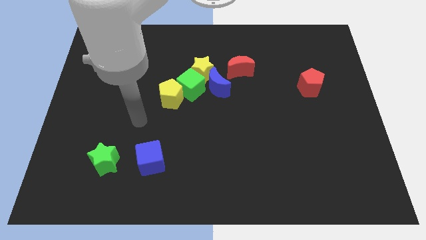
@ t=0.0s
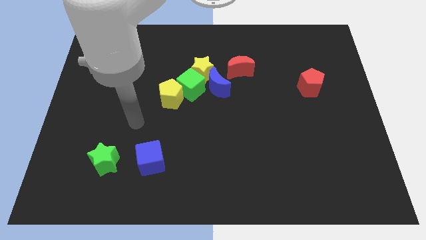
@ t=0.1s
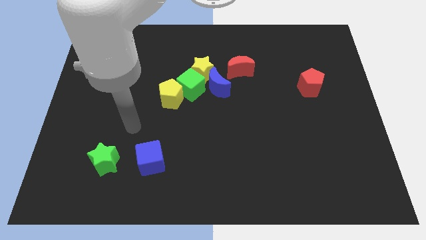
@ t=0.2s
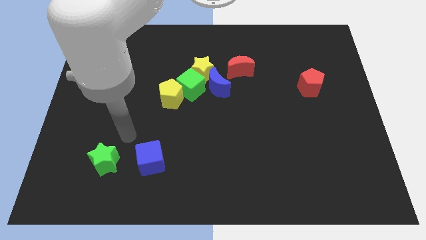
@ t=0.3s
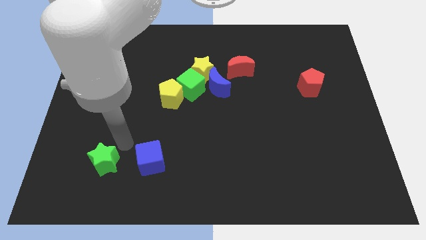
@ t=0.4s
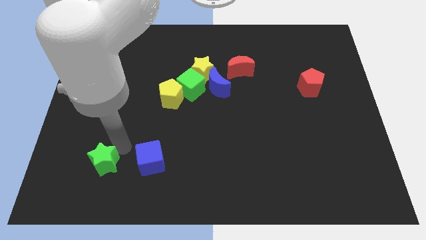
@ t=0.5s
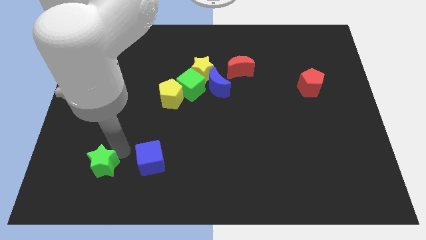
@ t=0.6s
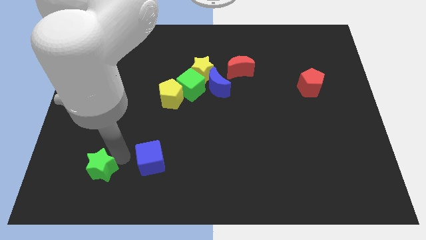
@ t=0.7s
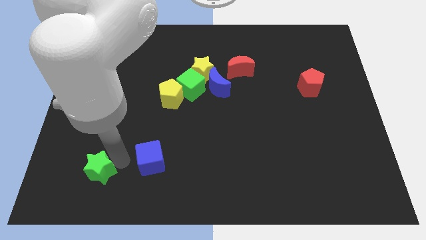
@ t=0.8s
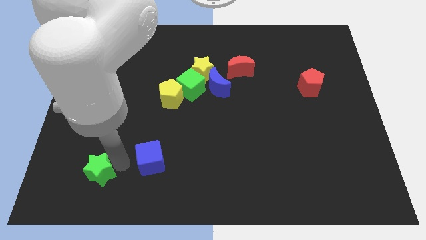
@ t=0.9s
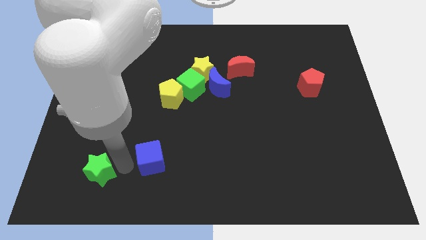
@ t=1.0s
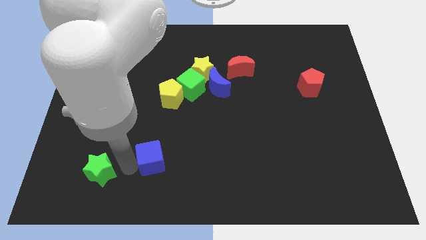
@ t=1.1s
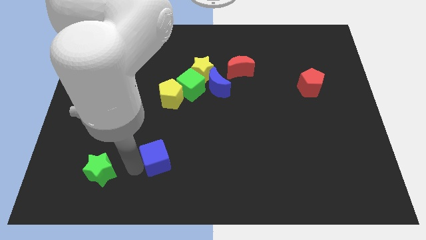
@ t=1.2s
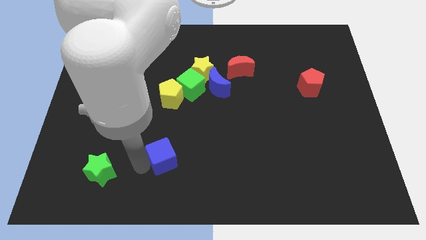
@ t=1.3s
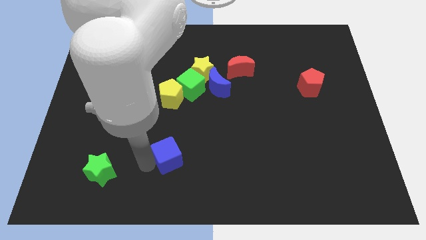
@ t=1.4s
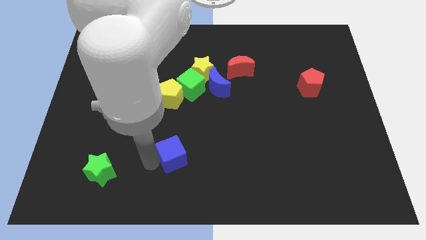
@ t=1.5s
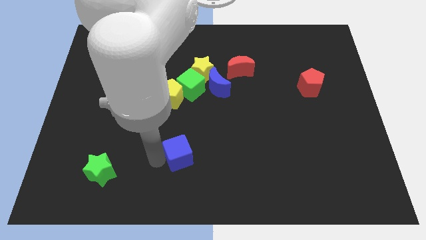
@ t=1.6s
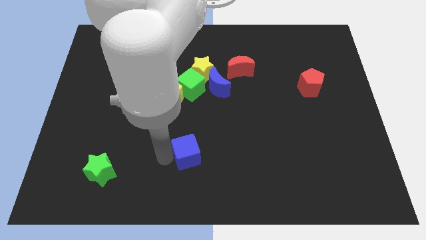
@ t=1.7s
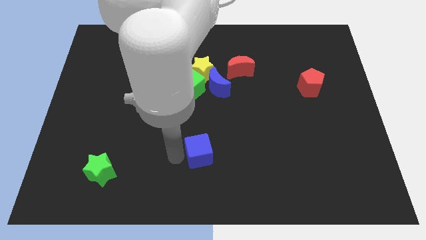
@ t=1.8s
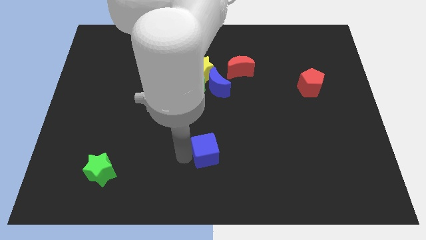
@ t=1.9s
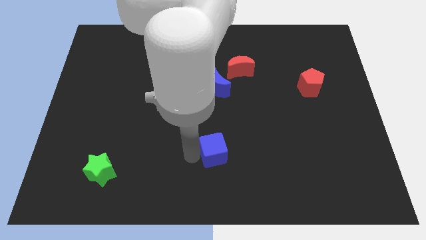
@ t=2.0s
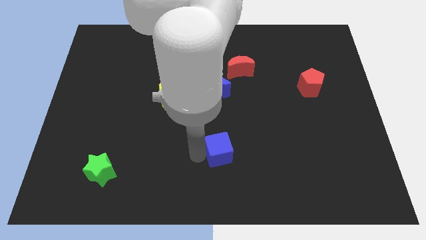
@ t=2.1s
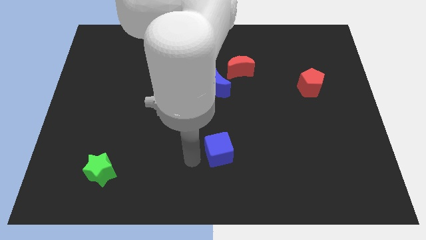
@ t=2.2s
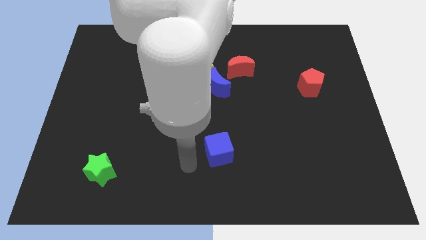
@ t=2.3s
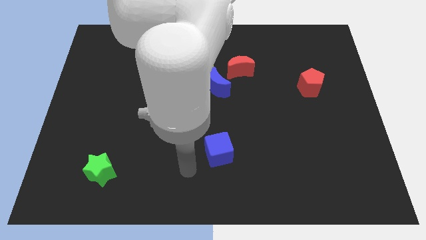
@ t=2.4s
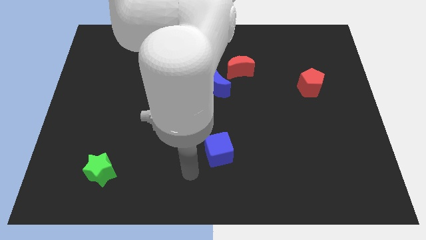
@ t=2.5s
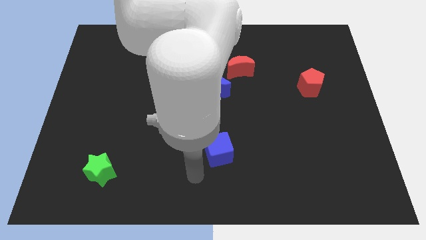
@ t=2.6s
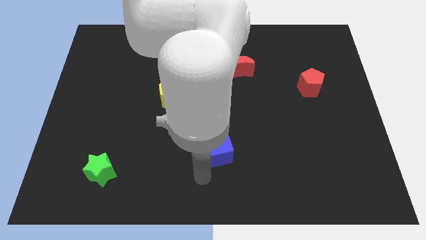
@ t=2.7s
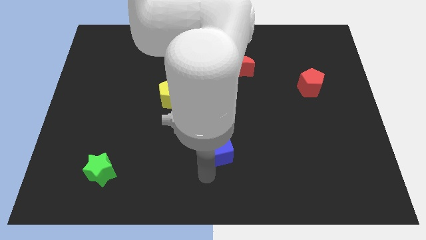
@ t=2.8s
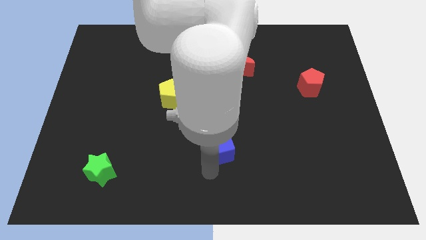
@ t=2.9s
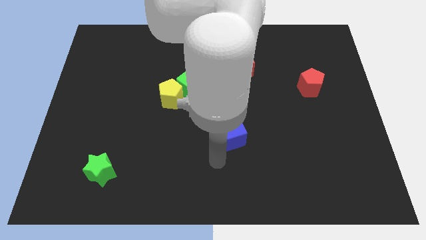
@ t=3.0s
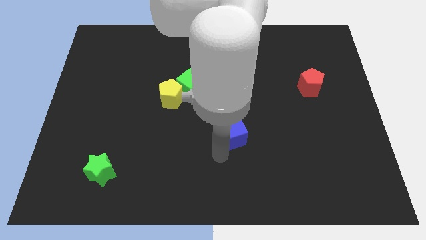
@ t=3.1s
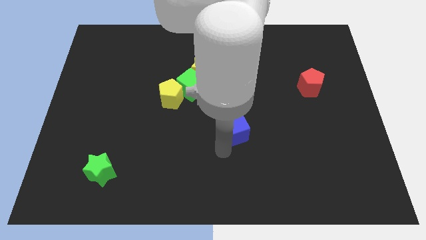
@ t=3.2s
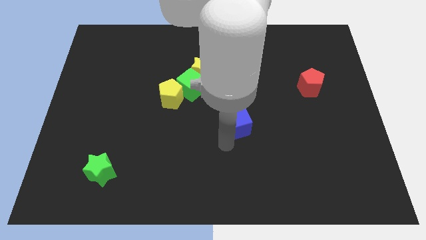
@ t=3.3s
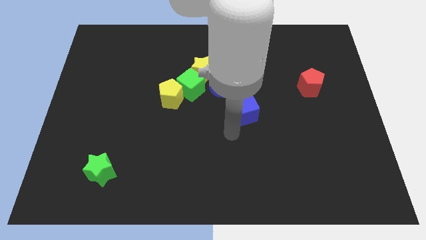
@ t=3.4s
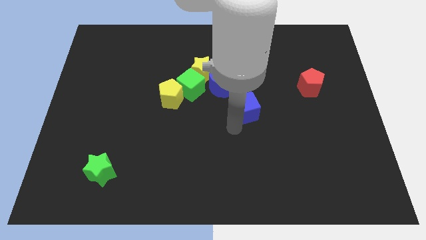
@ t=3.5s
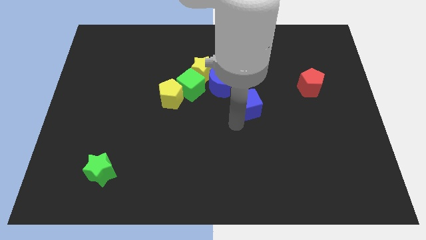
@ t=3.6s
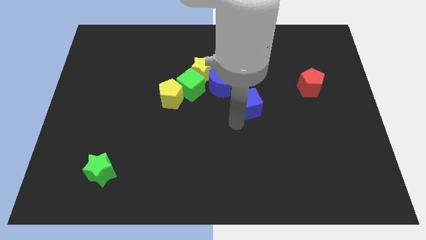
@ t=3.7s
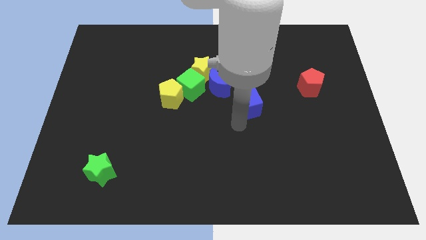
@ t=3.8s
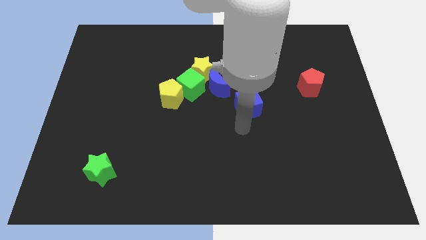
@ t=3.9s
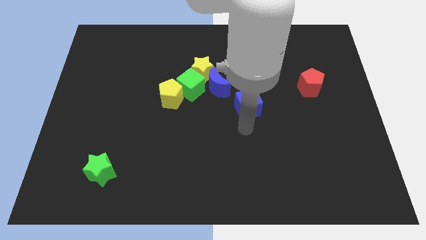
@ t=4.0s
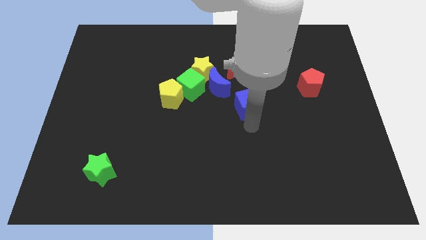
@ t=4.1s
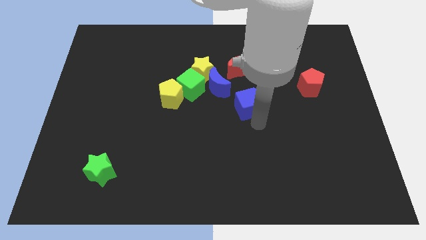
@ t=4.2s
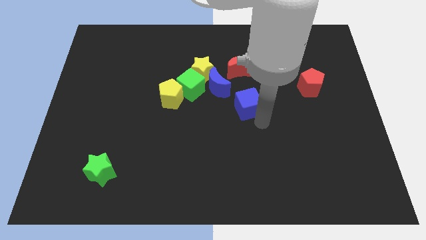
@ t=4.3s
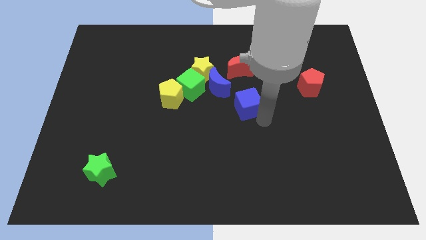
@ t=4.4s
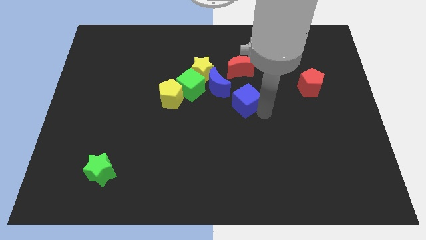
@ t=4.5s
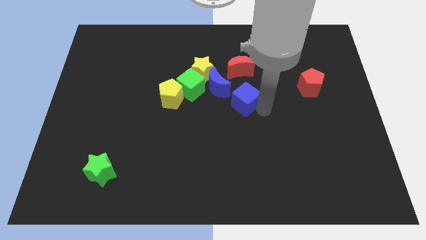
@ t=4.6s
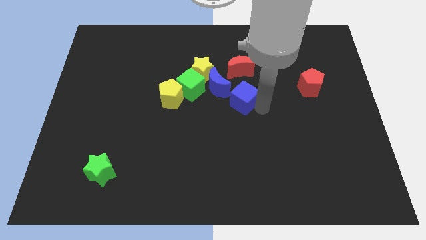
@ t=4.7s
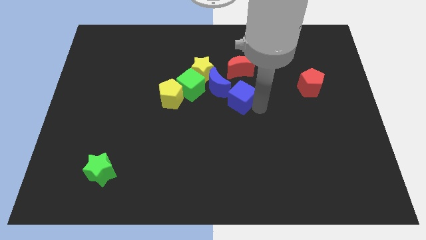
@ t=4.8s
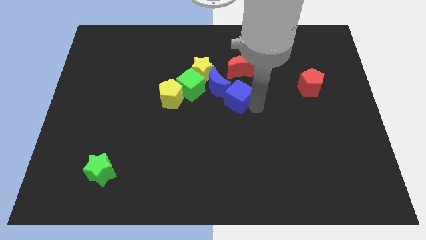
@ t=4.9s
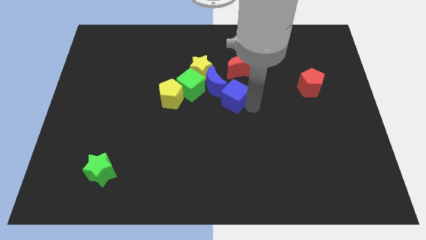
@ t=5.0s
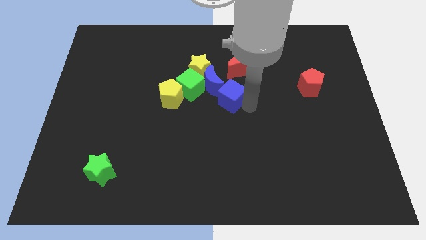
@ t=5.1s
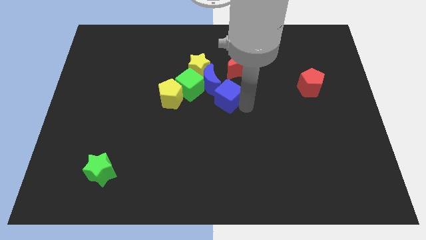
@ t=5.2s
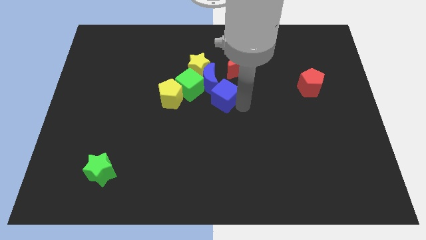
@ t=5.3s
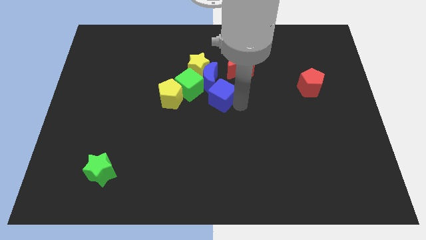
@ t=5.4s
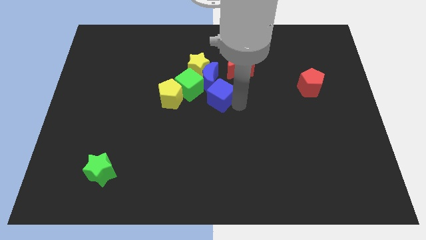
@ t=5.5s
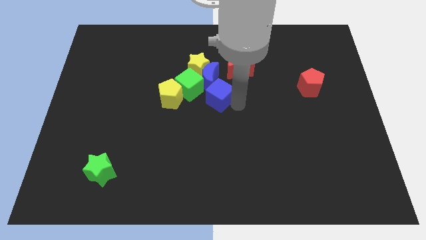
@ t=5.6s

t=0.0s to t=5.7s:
slide the blue cube close to the blue moon

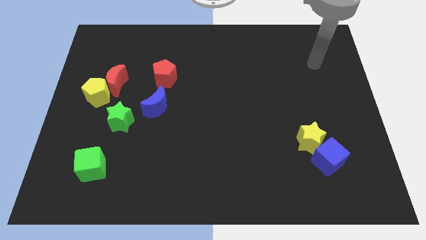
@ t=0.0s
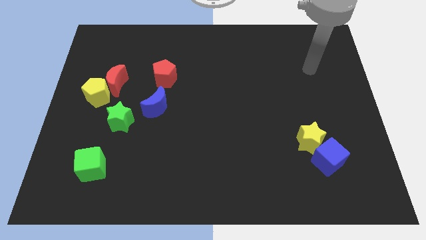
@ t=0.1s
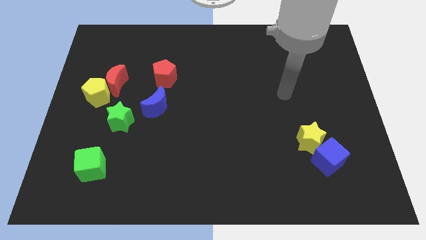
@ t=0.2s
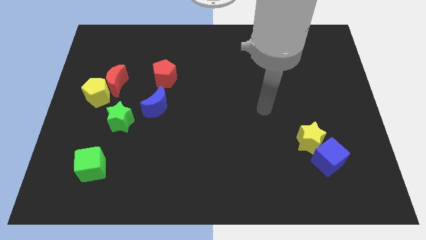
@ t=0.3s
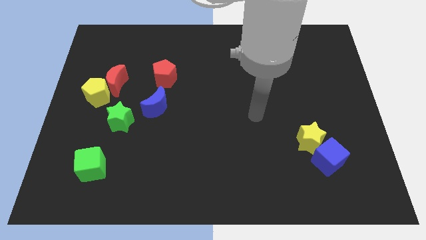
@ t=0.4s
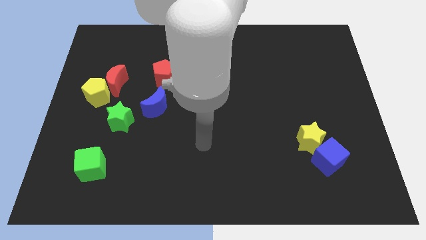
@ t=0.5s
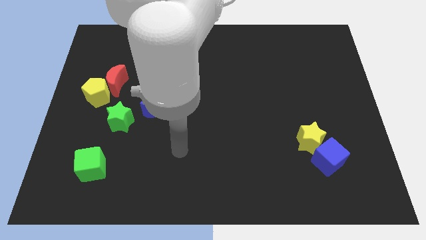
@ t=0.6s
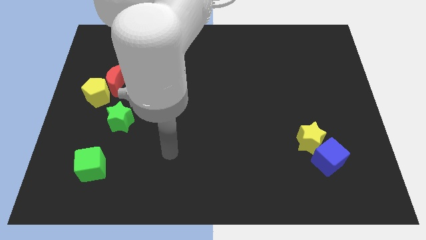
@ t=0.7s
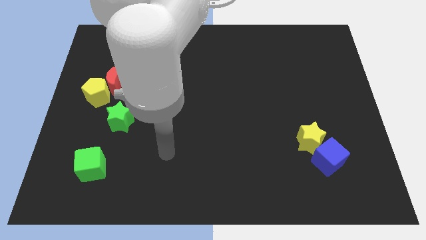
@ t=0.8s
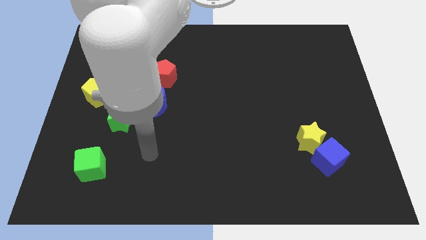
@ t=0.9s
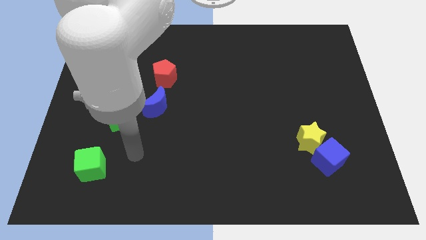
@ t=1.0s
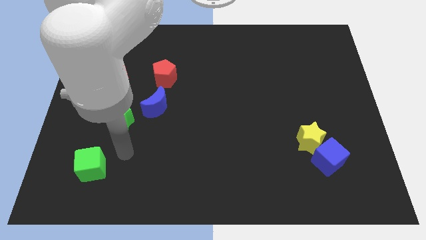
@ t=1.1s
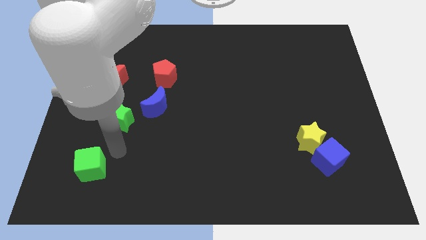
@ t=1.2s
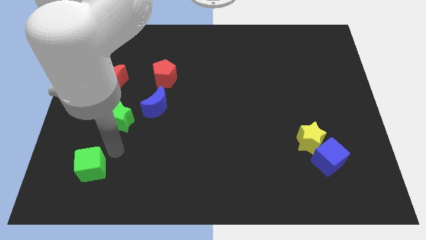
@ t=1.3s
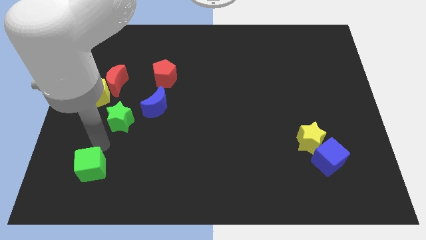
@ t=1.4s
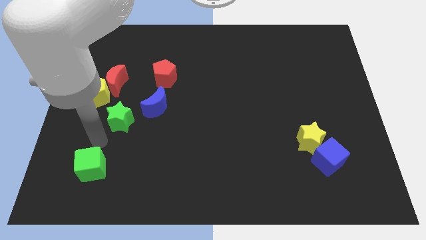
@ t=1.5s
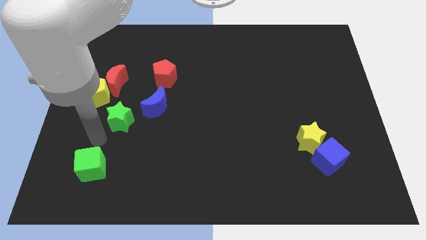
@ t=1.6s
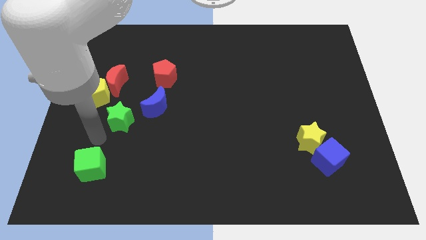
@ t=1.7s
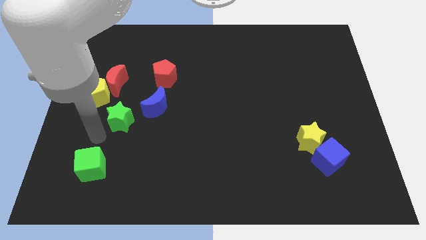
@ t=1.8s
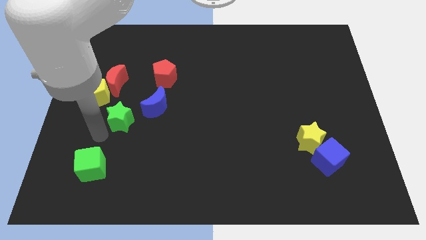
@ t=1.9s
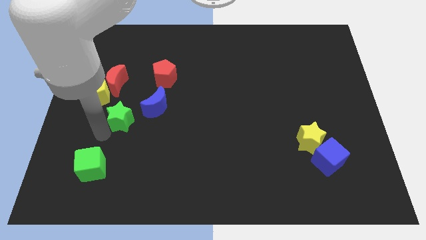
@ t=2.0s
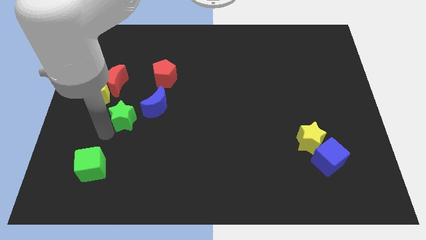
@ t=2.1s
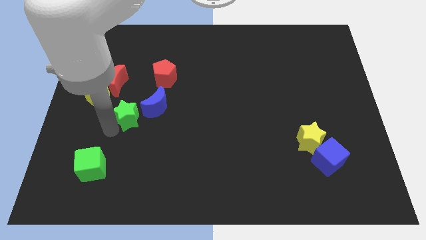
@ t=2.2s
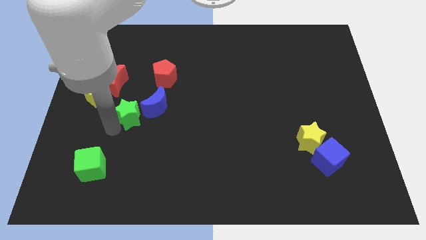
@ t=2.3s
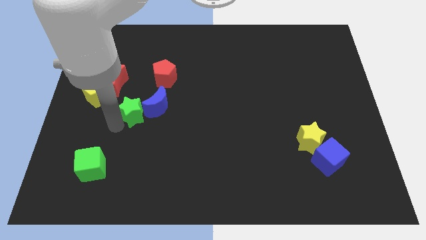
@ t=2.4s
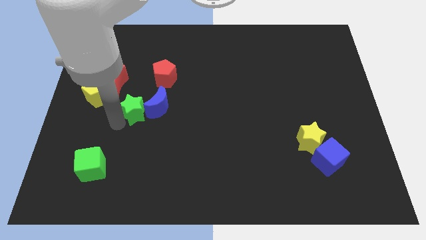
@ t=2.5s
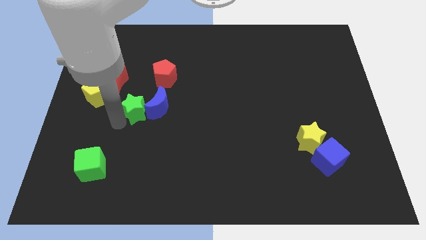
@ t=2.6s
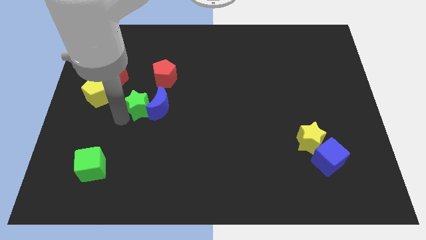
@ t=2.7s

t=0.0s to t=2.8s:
slide the green star close to the blue moon

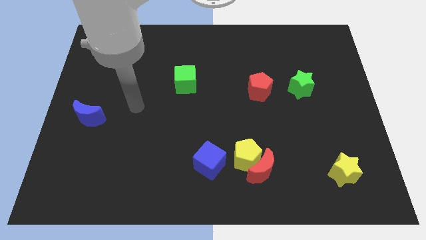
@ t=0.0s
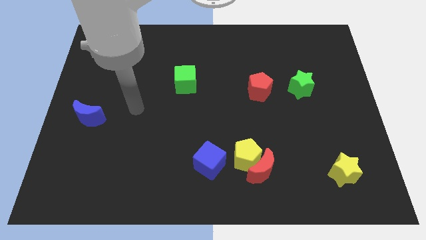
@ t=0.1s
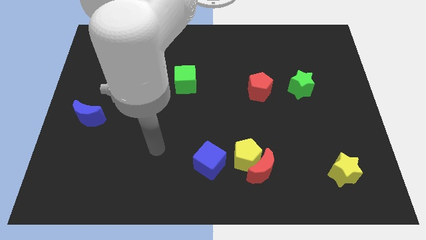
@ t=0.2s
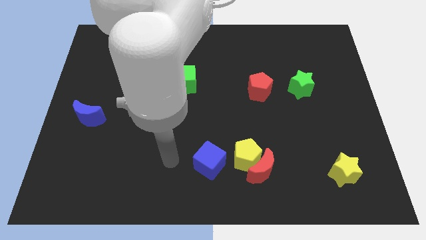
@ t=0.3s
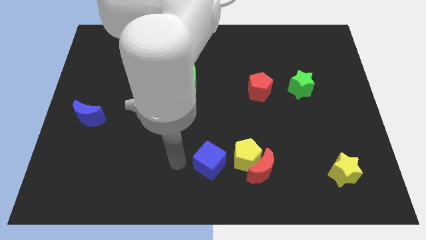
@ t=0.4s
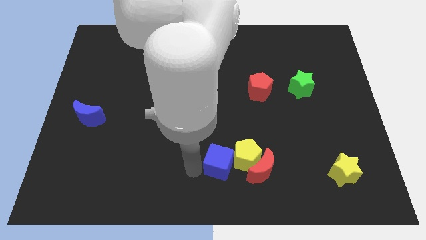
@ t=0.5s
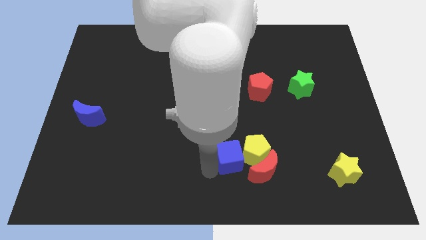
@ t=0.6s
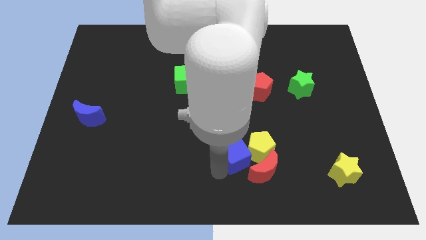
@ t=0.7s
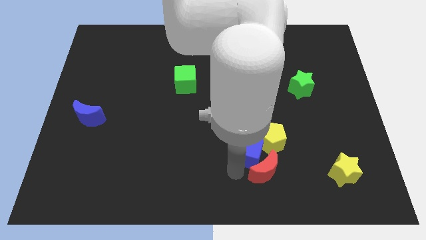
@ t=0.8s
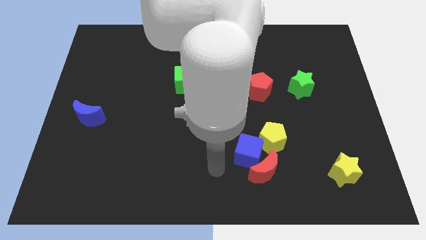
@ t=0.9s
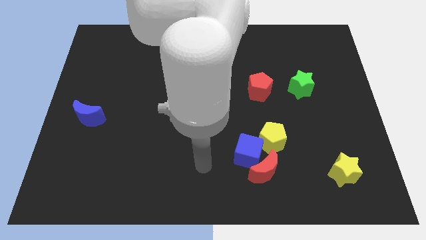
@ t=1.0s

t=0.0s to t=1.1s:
push the blue cube close to the red moon
